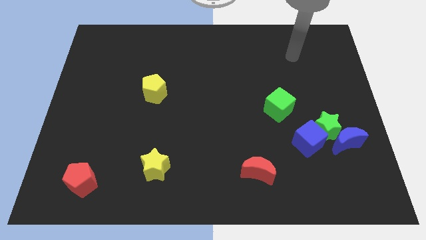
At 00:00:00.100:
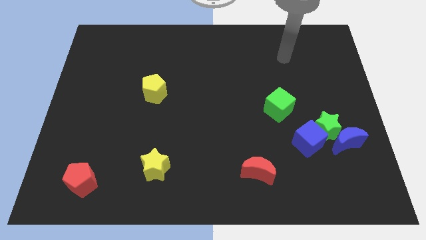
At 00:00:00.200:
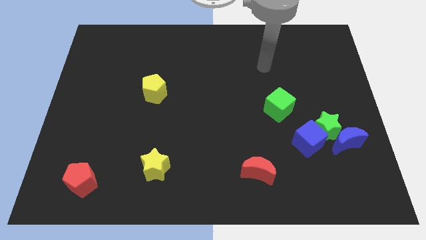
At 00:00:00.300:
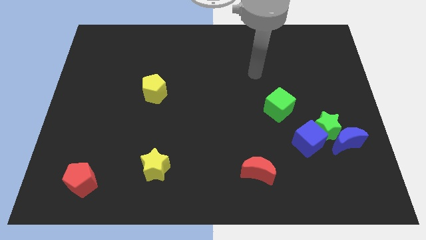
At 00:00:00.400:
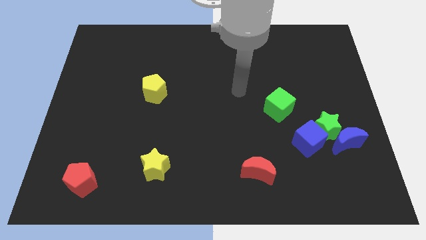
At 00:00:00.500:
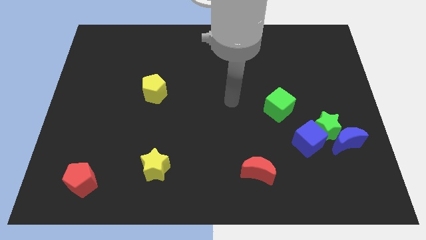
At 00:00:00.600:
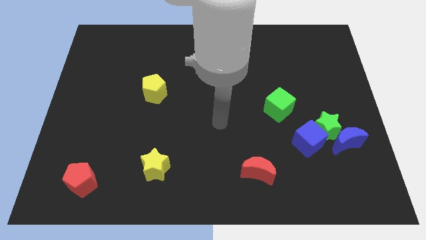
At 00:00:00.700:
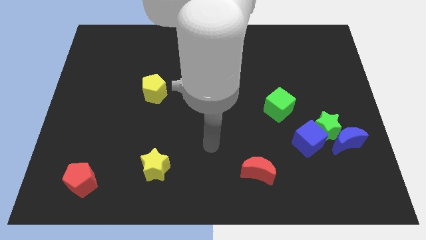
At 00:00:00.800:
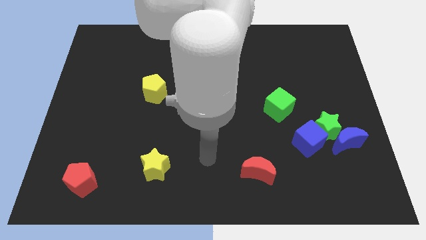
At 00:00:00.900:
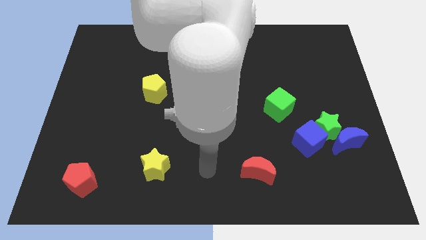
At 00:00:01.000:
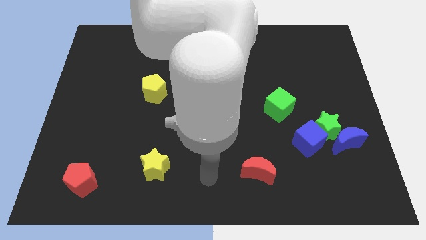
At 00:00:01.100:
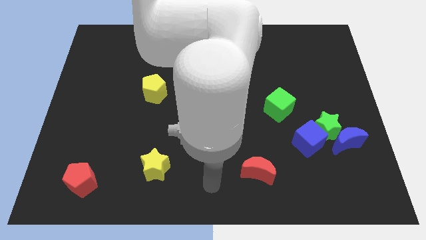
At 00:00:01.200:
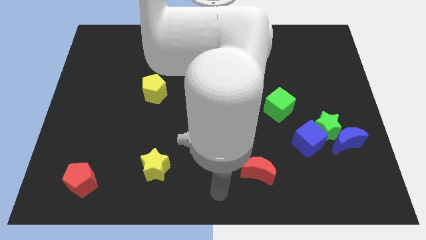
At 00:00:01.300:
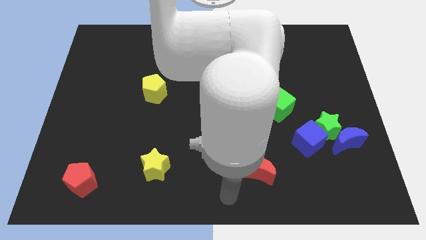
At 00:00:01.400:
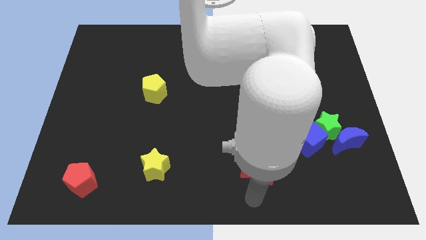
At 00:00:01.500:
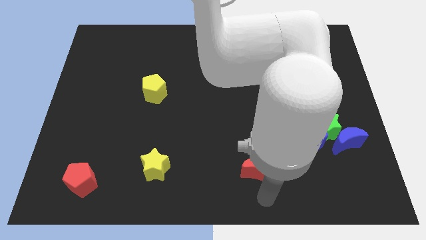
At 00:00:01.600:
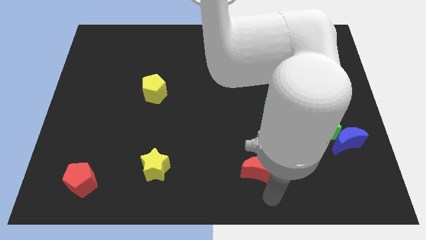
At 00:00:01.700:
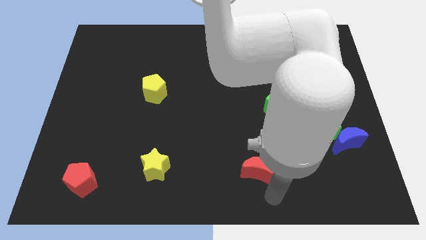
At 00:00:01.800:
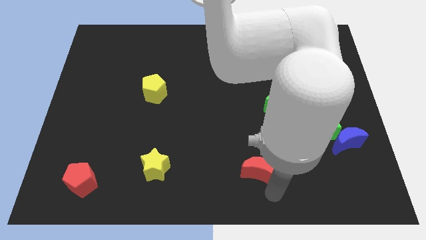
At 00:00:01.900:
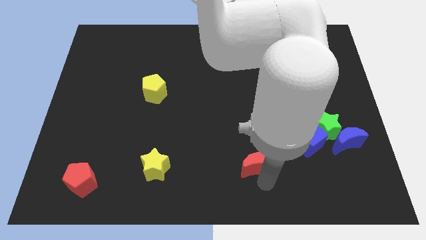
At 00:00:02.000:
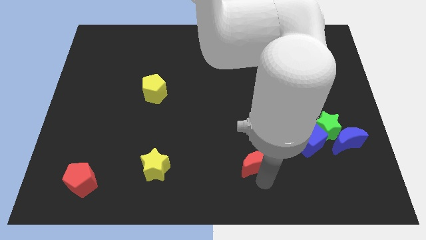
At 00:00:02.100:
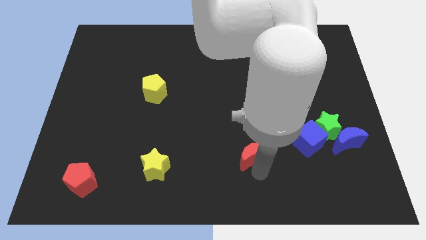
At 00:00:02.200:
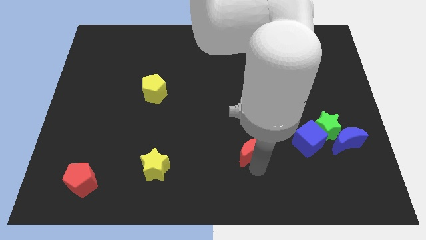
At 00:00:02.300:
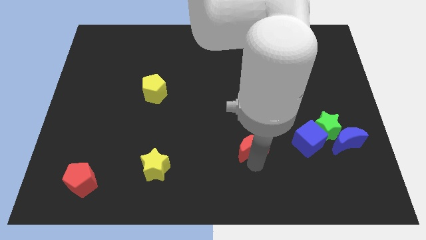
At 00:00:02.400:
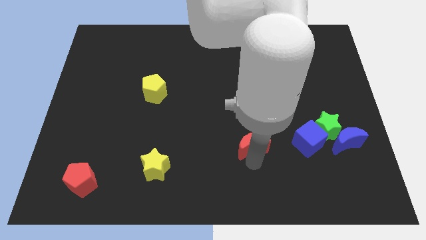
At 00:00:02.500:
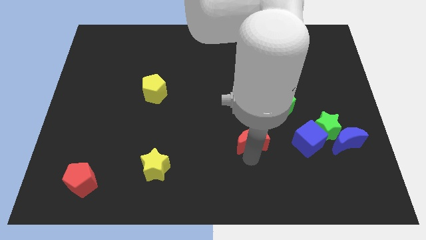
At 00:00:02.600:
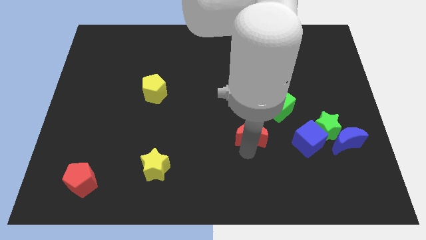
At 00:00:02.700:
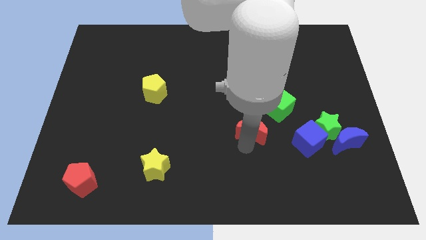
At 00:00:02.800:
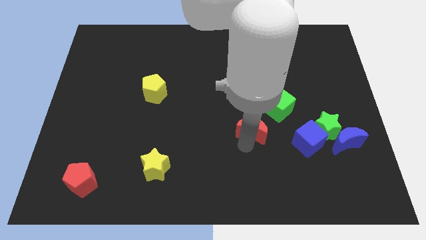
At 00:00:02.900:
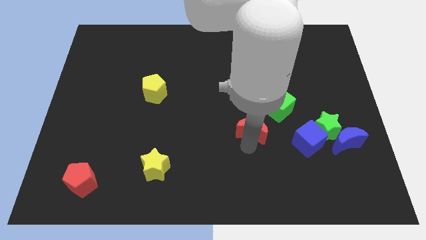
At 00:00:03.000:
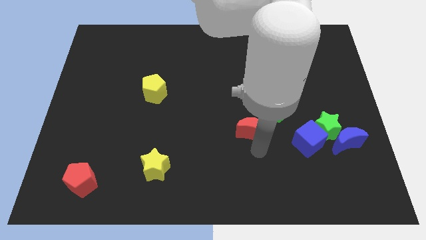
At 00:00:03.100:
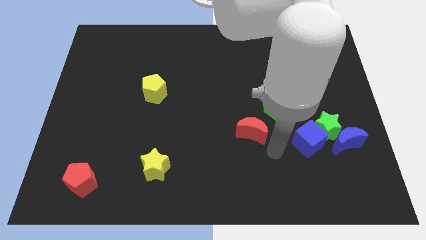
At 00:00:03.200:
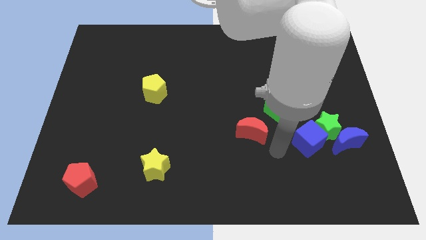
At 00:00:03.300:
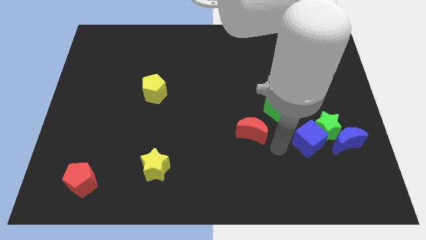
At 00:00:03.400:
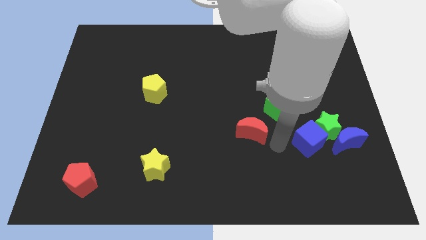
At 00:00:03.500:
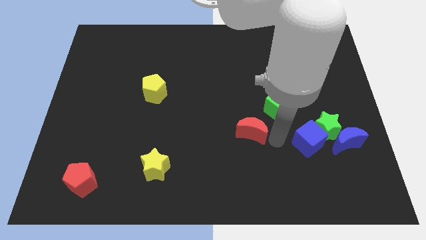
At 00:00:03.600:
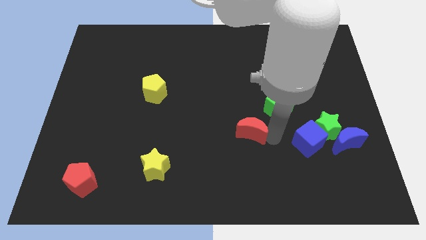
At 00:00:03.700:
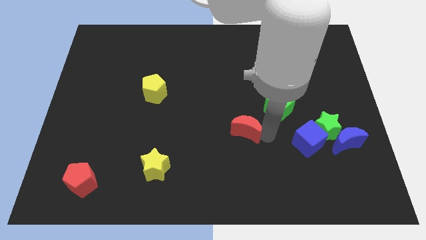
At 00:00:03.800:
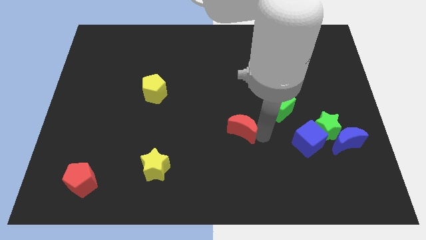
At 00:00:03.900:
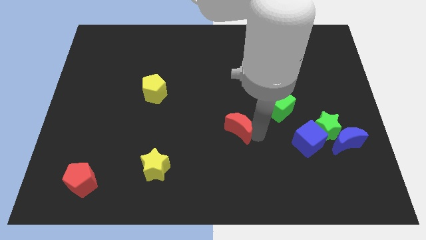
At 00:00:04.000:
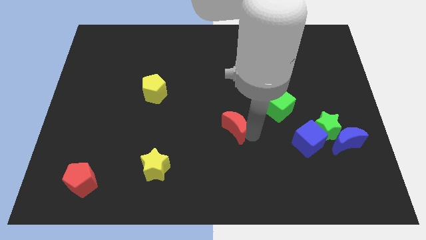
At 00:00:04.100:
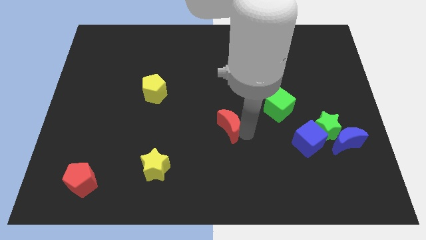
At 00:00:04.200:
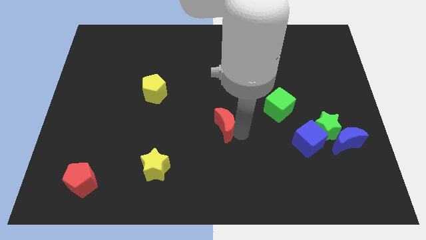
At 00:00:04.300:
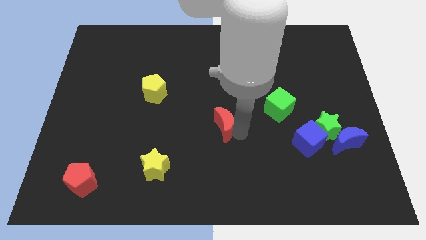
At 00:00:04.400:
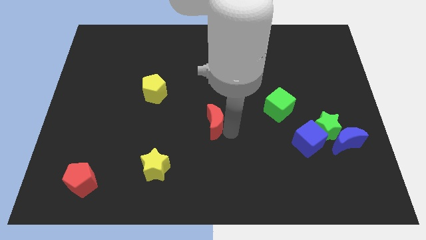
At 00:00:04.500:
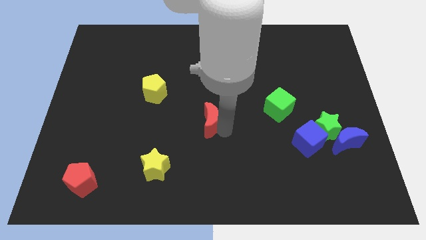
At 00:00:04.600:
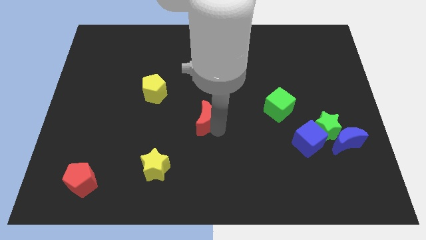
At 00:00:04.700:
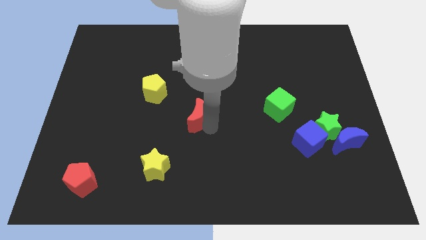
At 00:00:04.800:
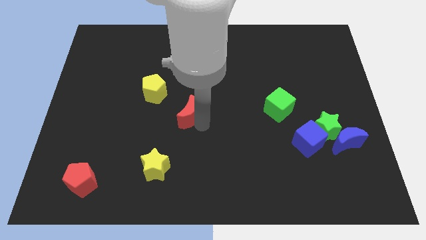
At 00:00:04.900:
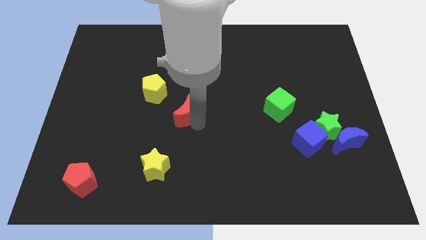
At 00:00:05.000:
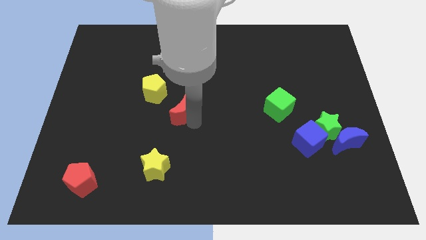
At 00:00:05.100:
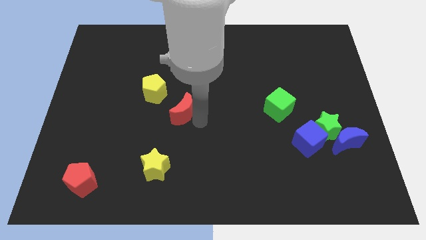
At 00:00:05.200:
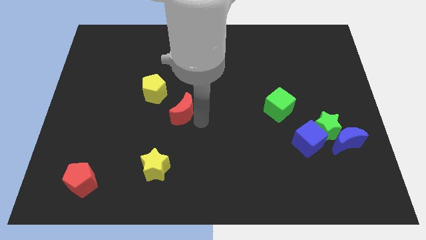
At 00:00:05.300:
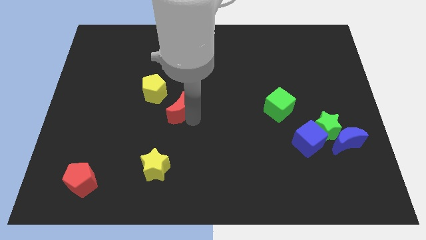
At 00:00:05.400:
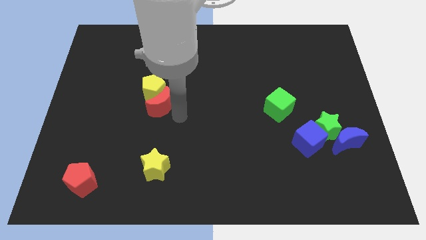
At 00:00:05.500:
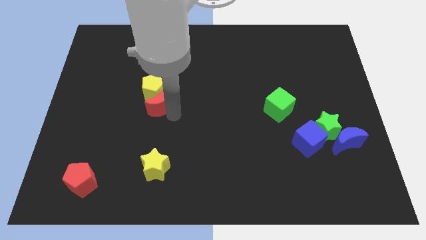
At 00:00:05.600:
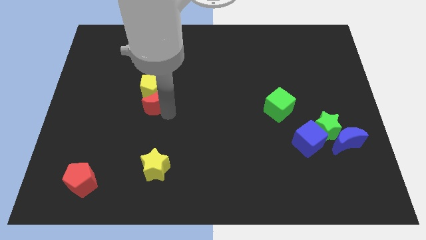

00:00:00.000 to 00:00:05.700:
push the red moon next to the yellow pentagon

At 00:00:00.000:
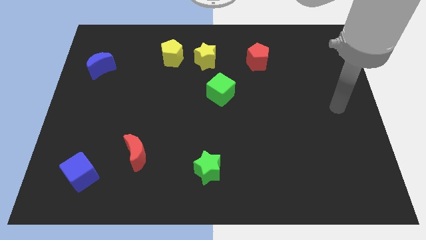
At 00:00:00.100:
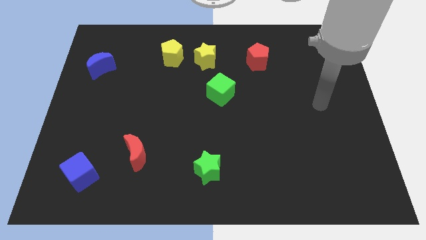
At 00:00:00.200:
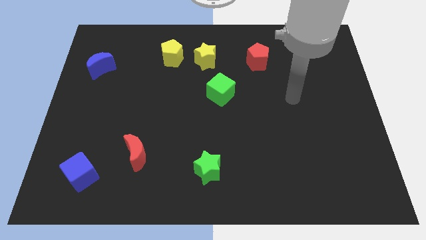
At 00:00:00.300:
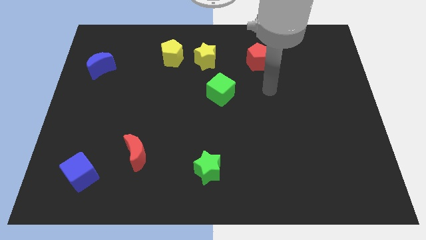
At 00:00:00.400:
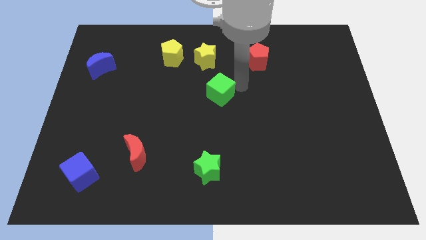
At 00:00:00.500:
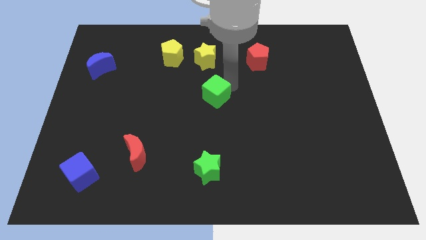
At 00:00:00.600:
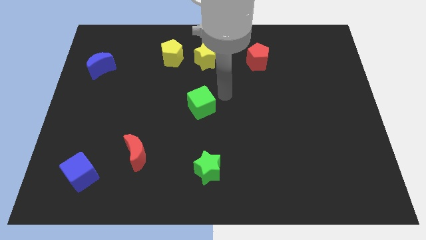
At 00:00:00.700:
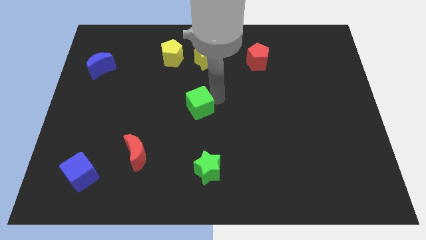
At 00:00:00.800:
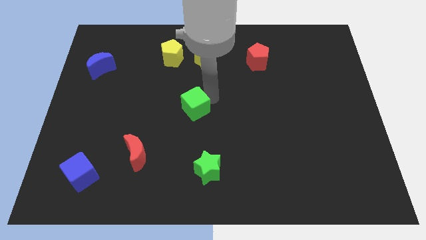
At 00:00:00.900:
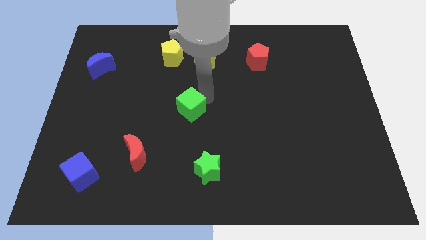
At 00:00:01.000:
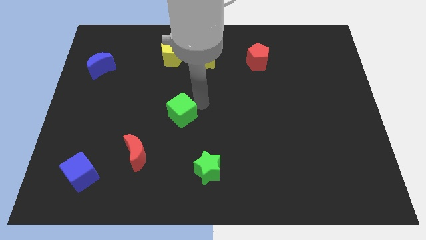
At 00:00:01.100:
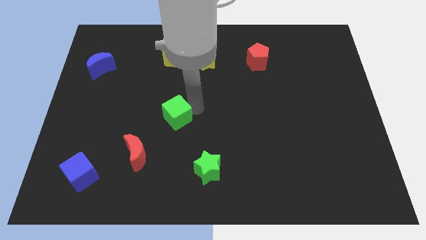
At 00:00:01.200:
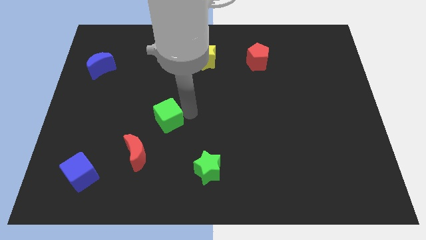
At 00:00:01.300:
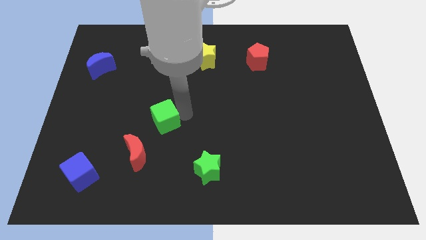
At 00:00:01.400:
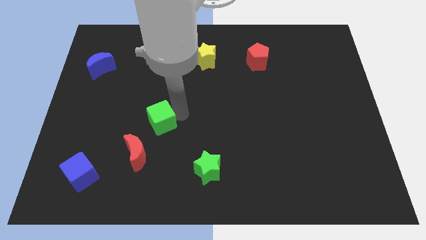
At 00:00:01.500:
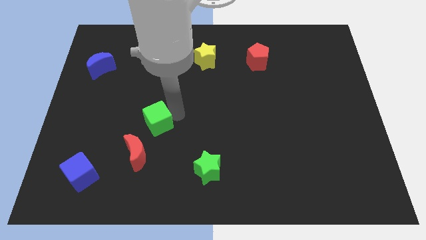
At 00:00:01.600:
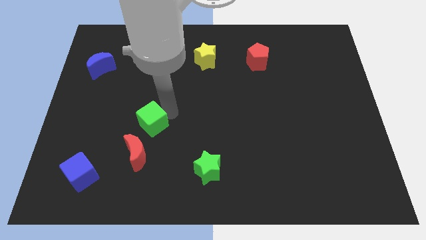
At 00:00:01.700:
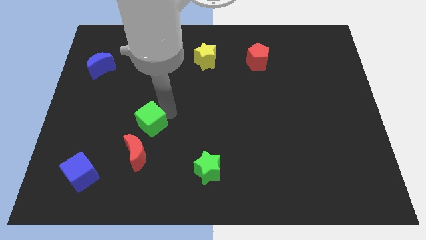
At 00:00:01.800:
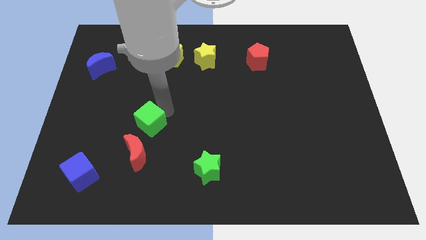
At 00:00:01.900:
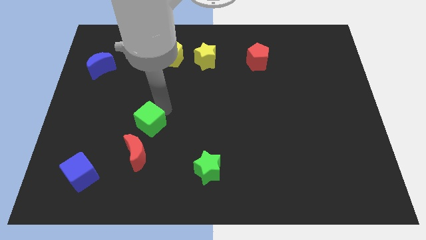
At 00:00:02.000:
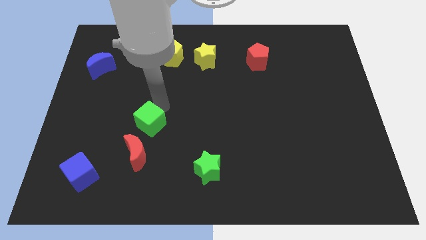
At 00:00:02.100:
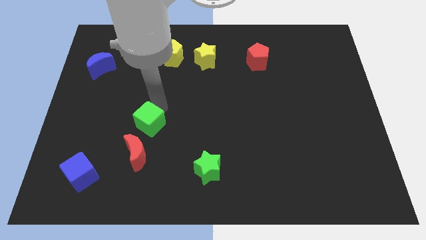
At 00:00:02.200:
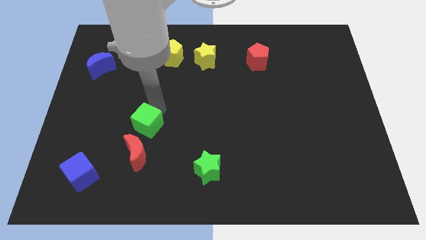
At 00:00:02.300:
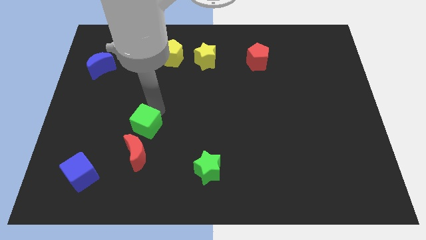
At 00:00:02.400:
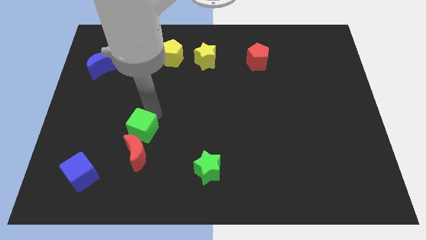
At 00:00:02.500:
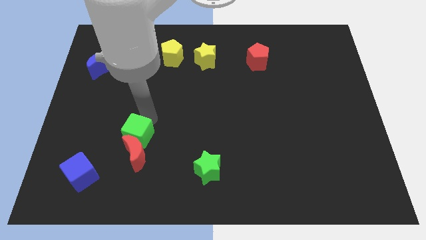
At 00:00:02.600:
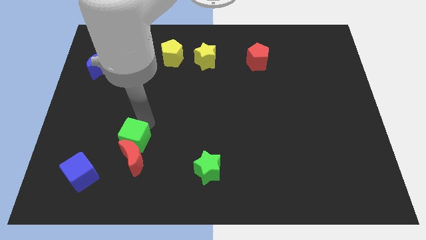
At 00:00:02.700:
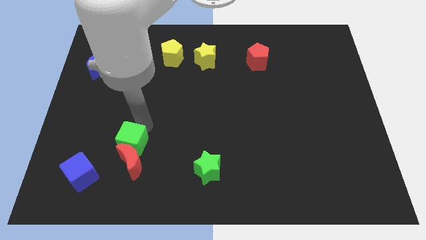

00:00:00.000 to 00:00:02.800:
put the green cube to the red moon
